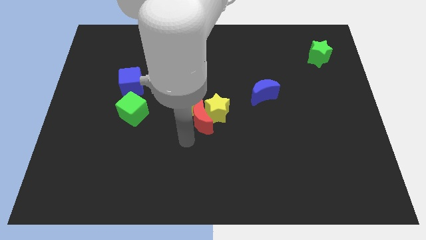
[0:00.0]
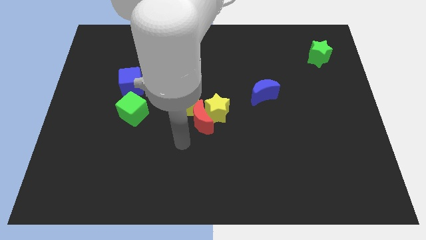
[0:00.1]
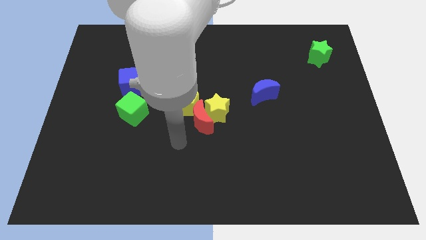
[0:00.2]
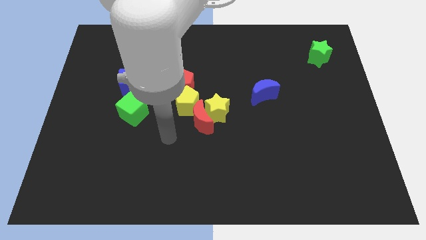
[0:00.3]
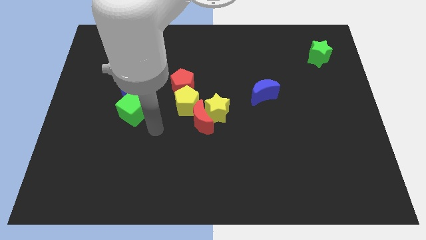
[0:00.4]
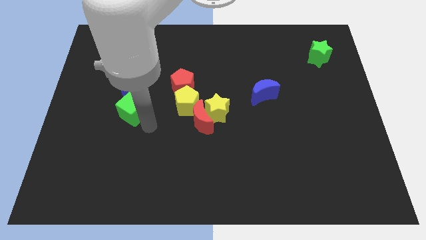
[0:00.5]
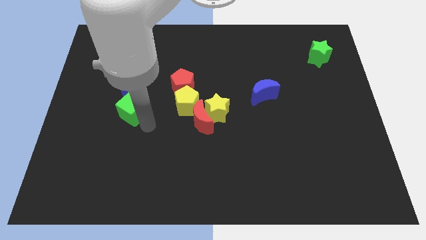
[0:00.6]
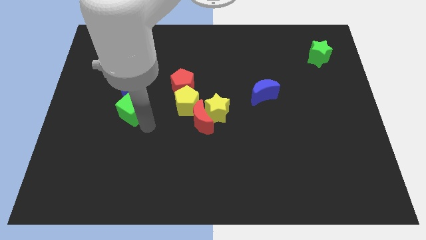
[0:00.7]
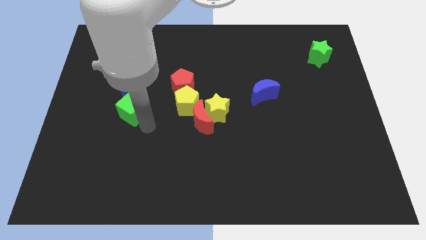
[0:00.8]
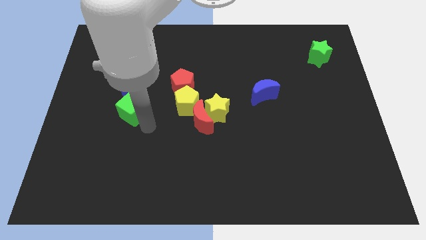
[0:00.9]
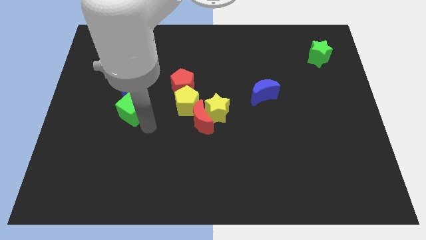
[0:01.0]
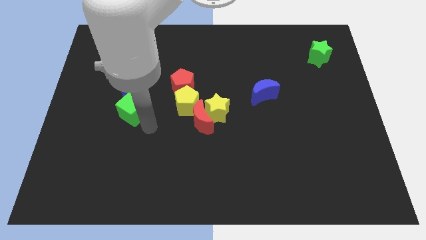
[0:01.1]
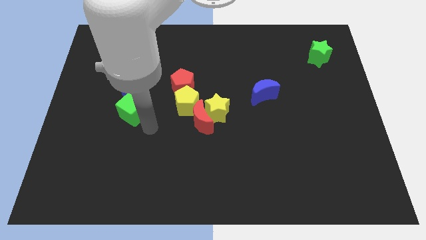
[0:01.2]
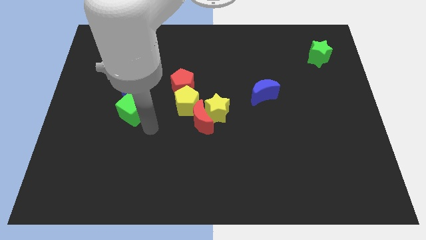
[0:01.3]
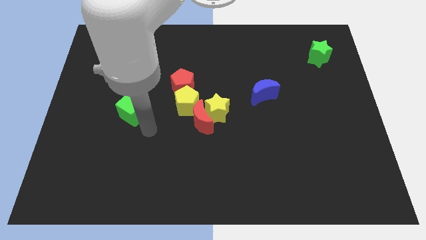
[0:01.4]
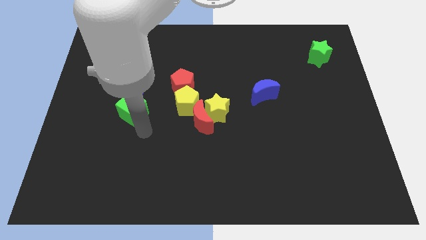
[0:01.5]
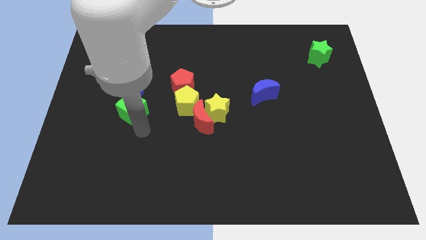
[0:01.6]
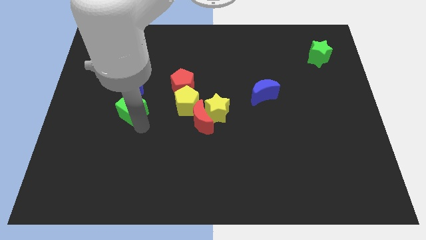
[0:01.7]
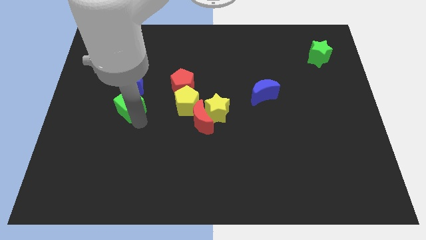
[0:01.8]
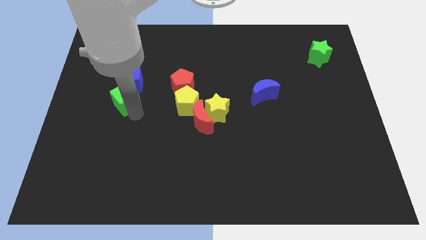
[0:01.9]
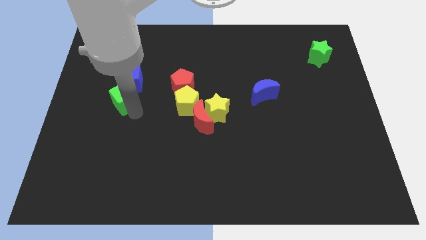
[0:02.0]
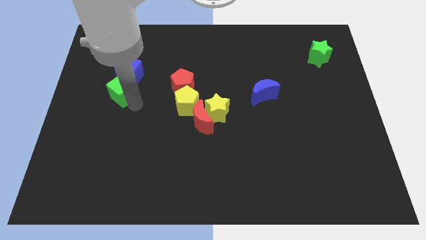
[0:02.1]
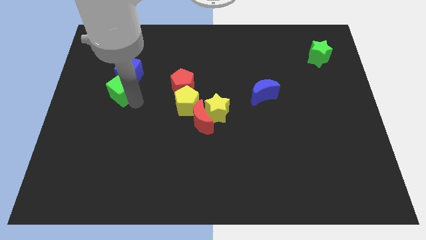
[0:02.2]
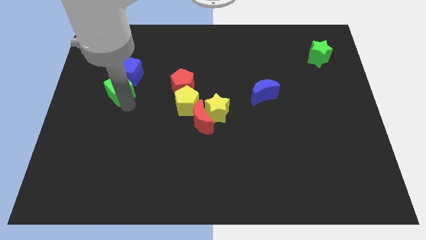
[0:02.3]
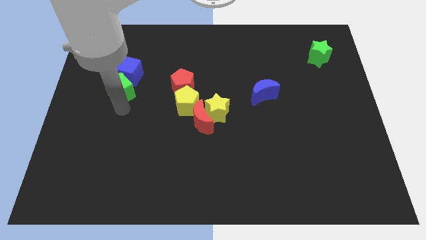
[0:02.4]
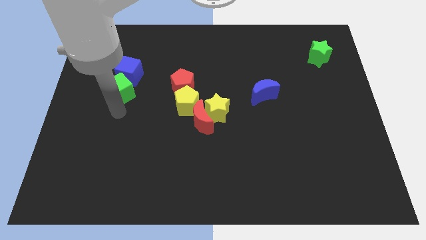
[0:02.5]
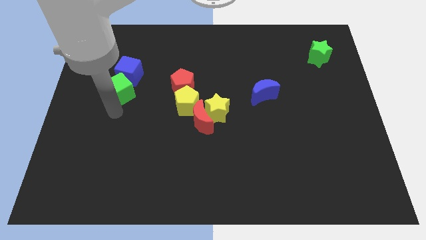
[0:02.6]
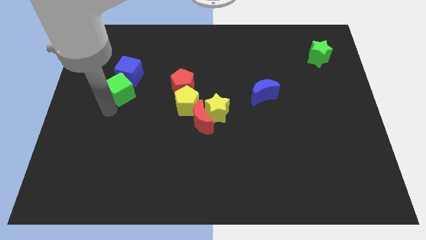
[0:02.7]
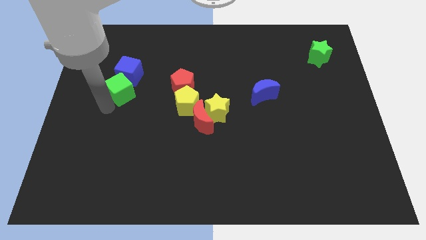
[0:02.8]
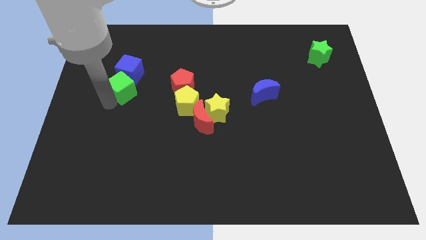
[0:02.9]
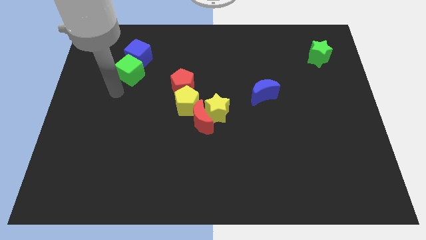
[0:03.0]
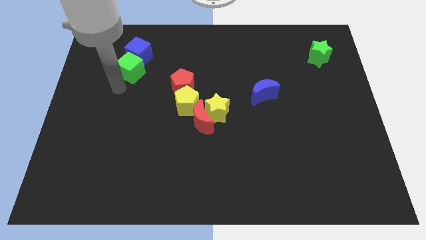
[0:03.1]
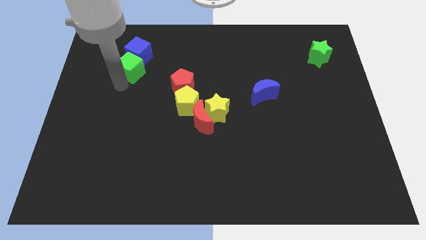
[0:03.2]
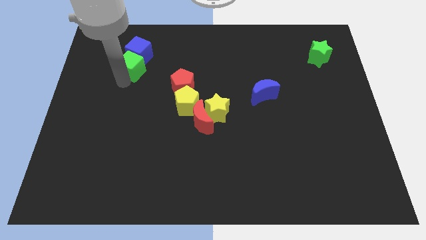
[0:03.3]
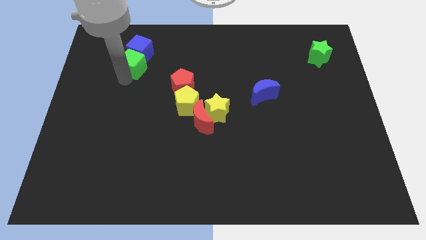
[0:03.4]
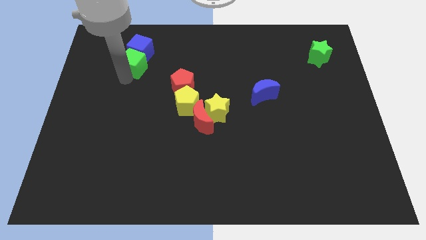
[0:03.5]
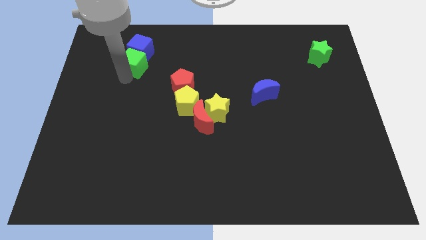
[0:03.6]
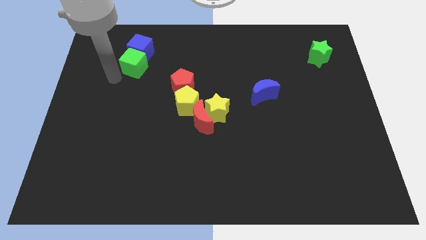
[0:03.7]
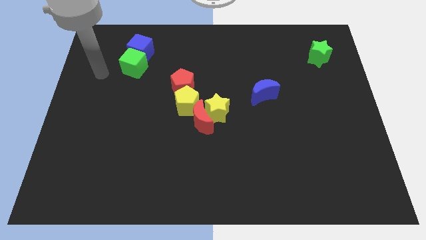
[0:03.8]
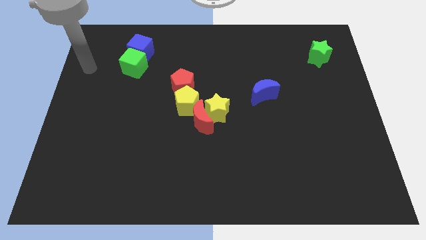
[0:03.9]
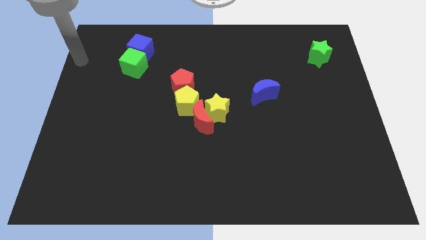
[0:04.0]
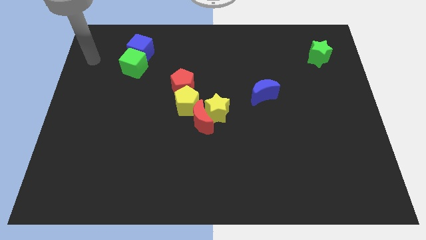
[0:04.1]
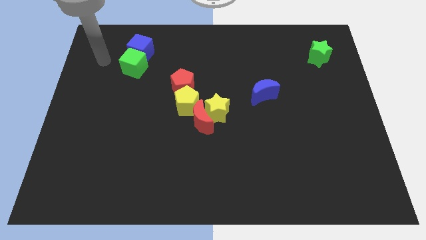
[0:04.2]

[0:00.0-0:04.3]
move the green cube into the blue cube

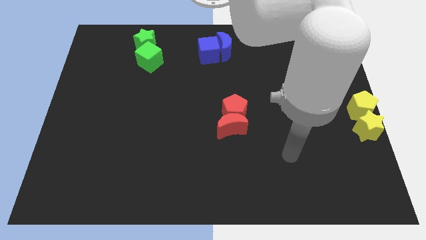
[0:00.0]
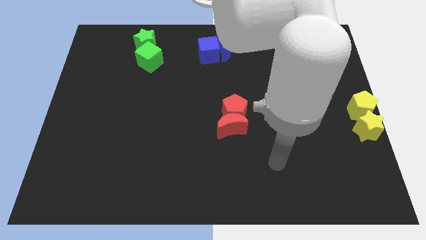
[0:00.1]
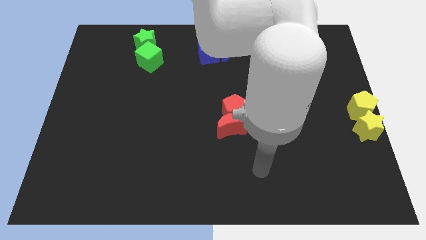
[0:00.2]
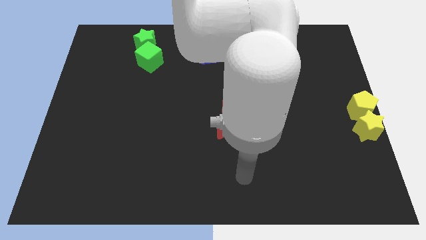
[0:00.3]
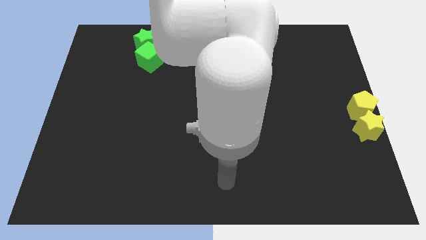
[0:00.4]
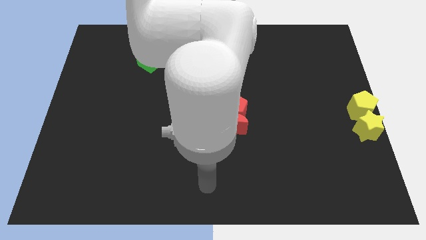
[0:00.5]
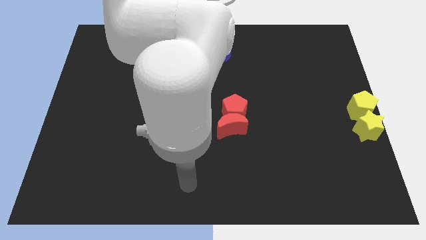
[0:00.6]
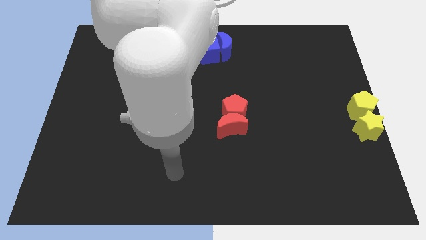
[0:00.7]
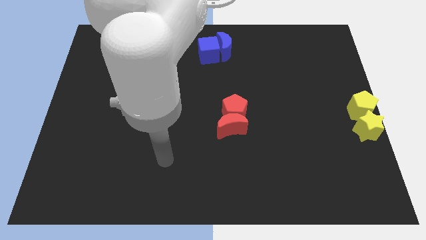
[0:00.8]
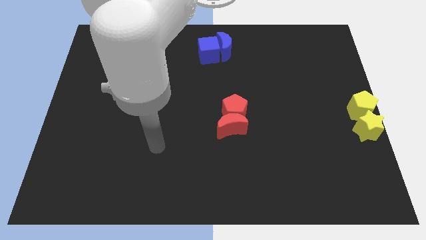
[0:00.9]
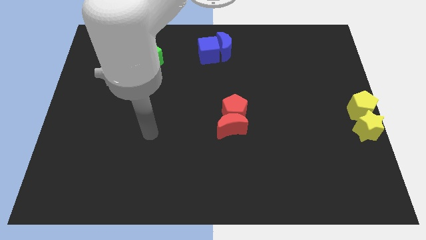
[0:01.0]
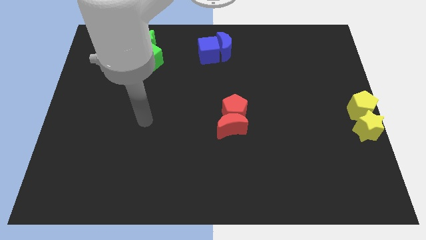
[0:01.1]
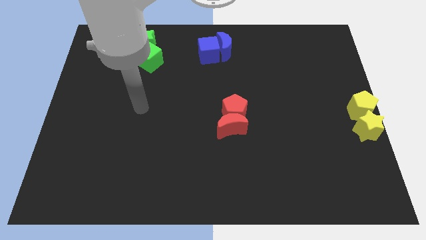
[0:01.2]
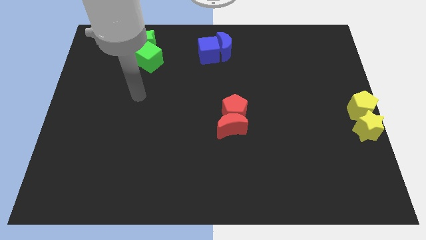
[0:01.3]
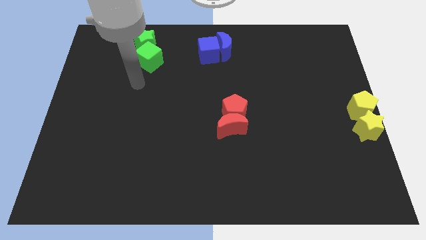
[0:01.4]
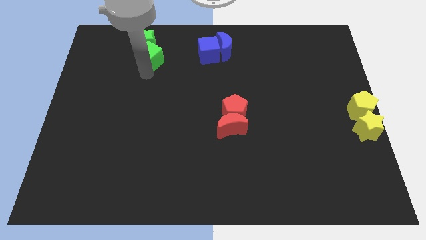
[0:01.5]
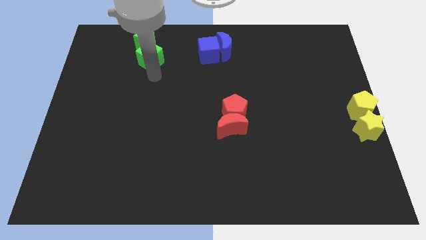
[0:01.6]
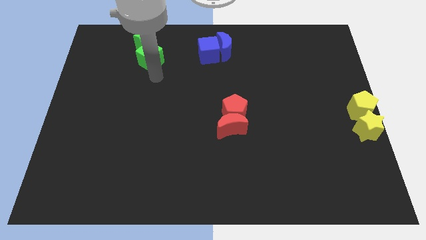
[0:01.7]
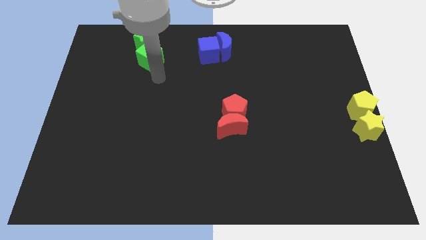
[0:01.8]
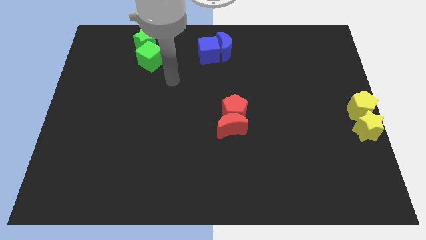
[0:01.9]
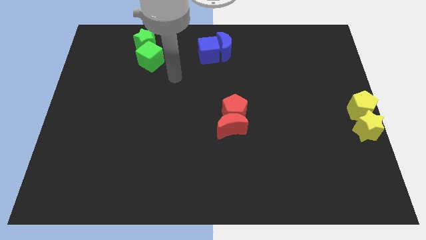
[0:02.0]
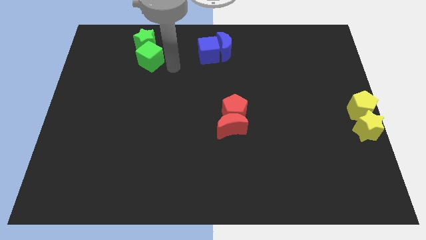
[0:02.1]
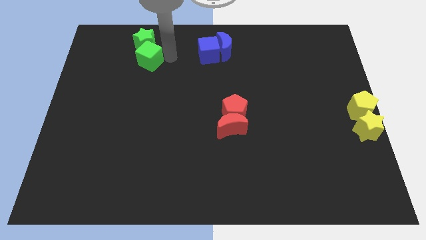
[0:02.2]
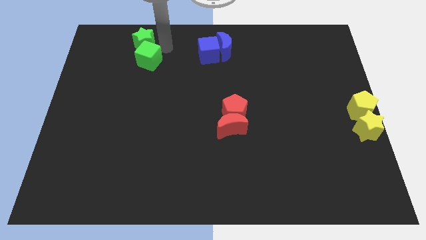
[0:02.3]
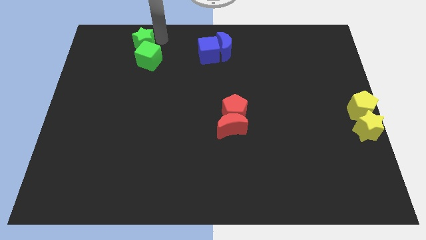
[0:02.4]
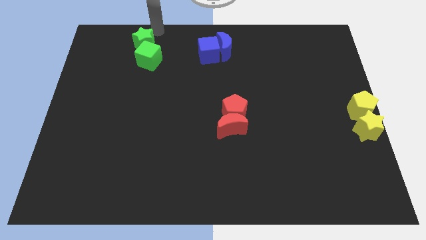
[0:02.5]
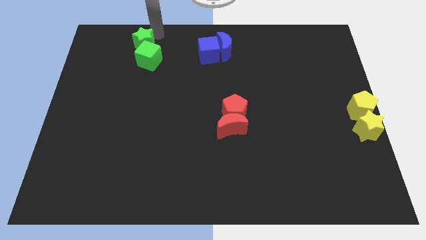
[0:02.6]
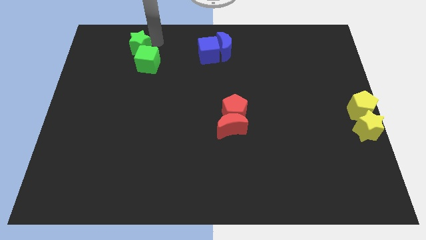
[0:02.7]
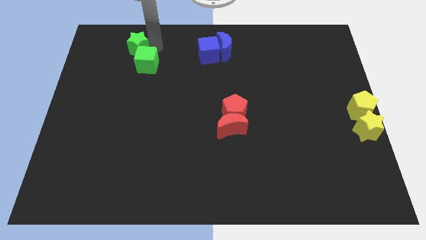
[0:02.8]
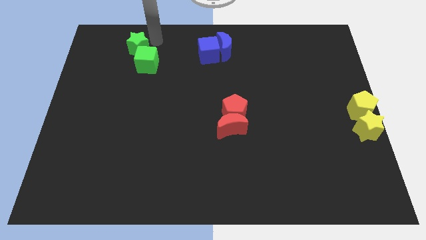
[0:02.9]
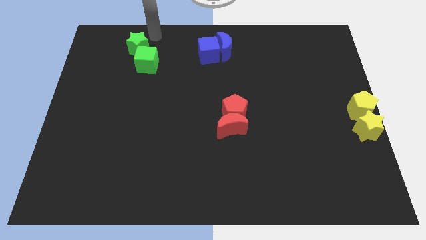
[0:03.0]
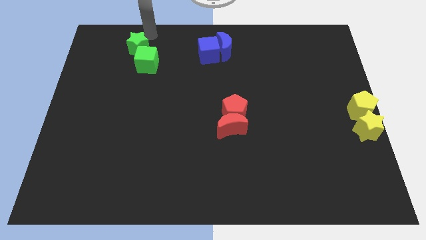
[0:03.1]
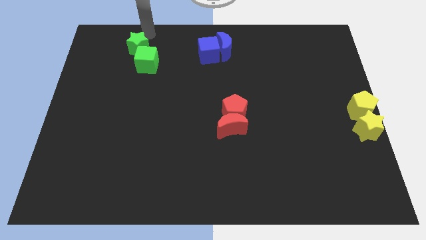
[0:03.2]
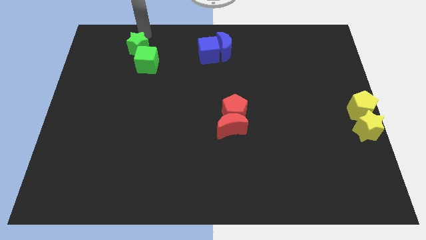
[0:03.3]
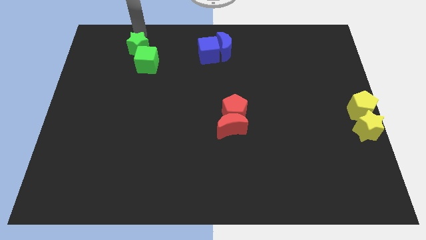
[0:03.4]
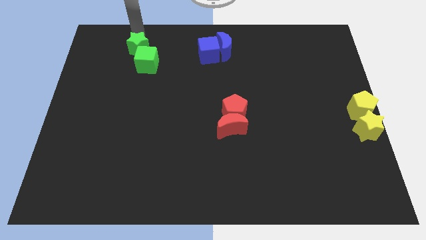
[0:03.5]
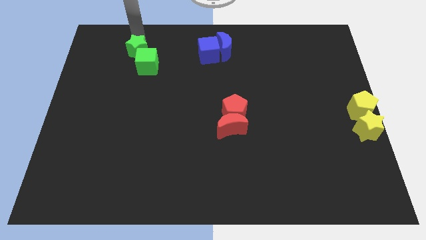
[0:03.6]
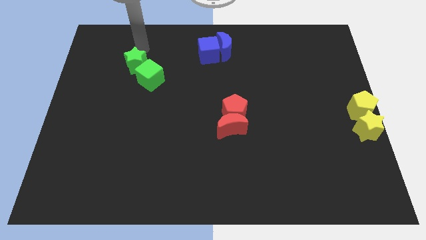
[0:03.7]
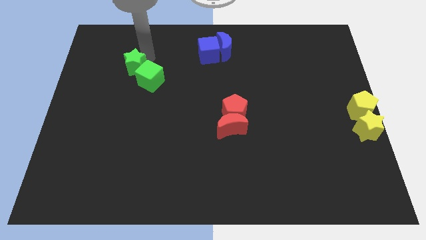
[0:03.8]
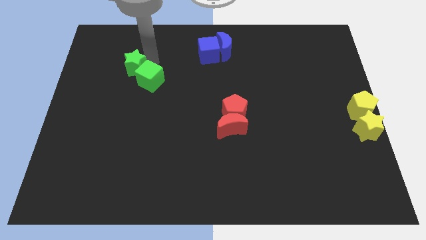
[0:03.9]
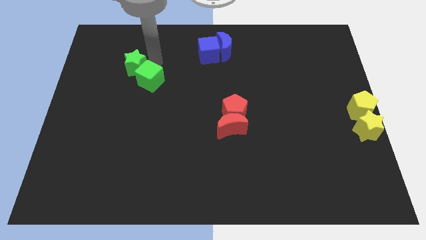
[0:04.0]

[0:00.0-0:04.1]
move the green blocks down slightly

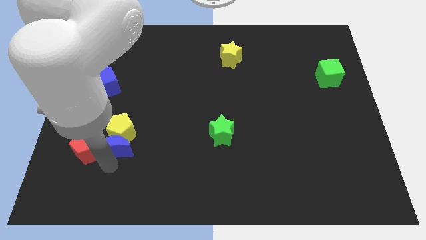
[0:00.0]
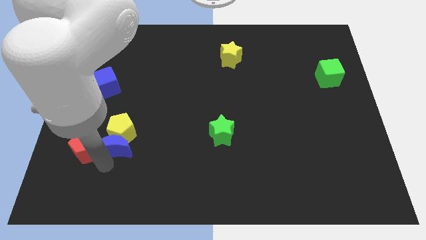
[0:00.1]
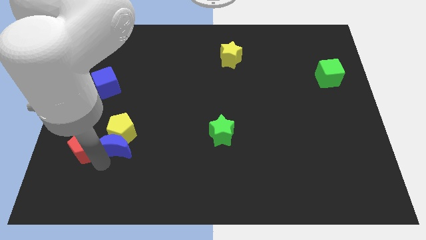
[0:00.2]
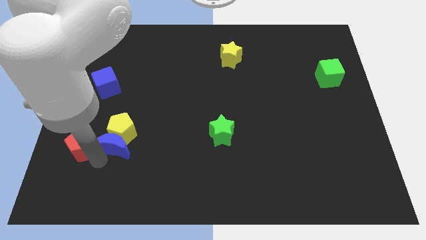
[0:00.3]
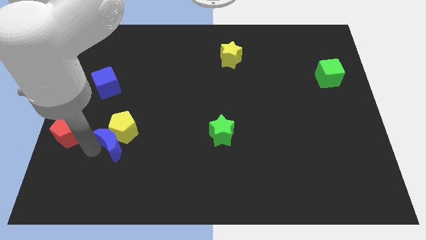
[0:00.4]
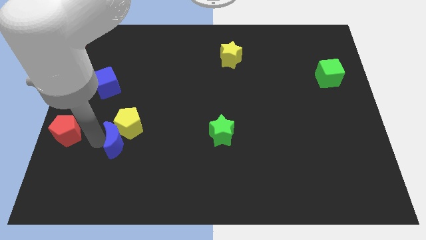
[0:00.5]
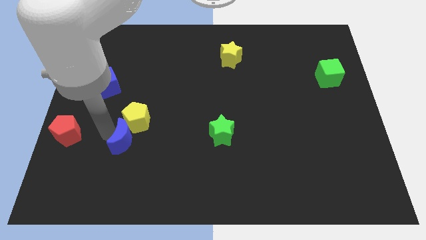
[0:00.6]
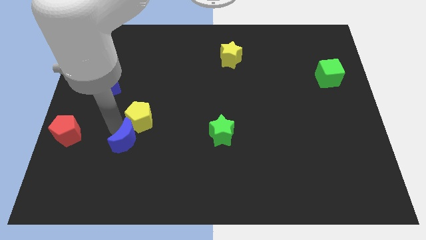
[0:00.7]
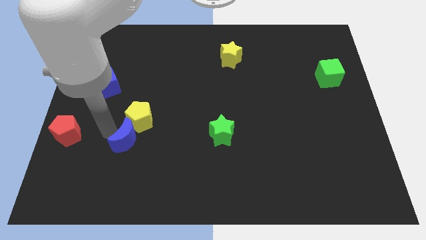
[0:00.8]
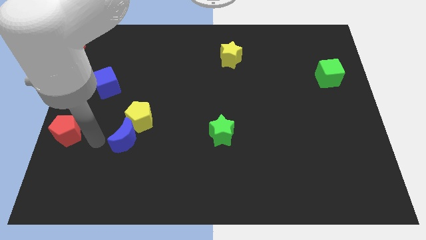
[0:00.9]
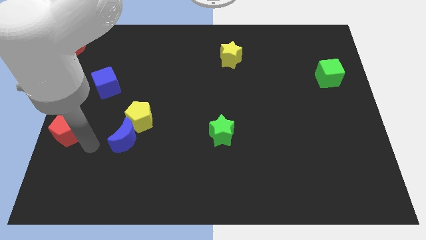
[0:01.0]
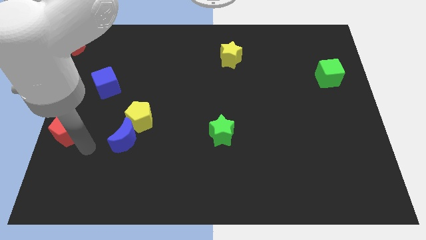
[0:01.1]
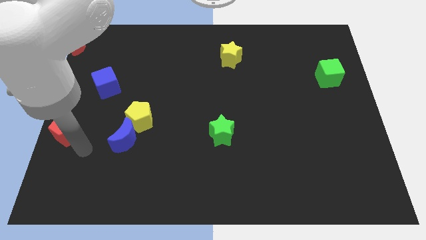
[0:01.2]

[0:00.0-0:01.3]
separate red pentagon and yellow pentagon
